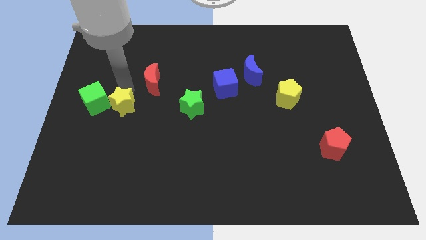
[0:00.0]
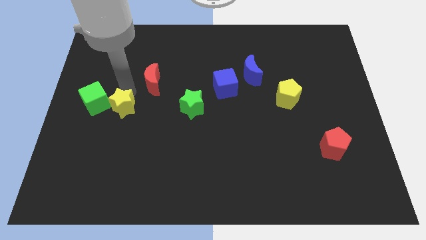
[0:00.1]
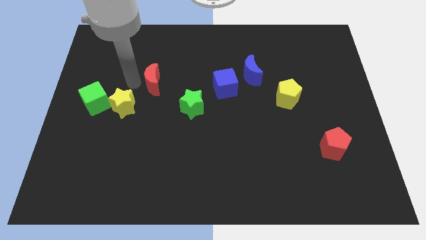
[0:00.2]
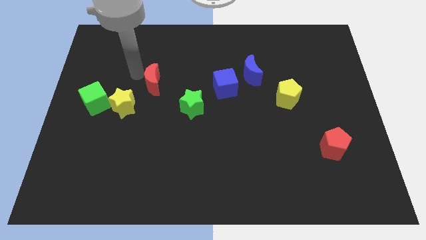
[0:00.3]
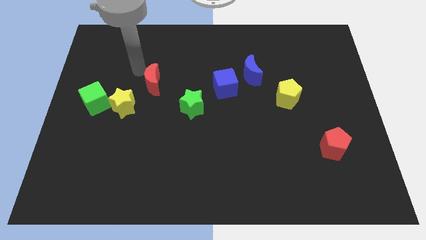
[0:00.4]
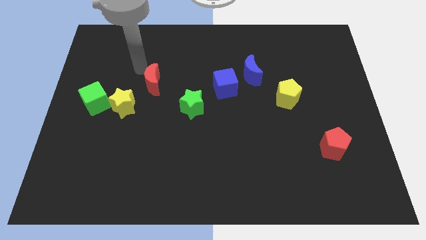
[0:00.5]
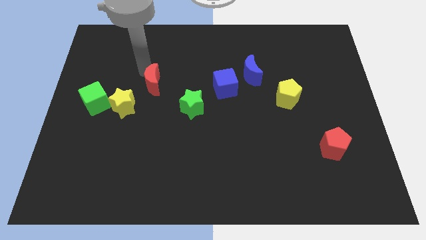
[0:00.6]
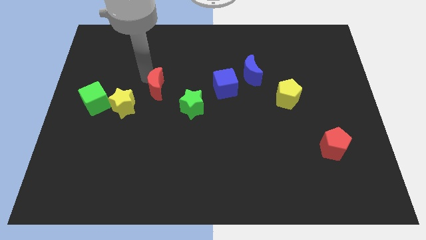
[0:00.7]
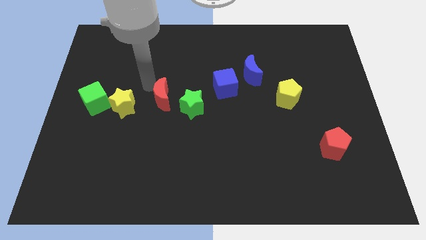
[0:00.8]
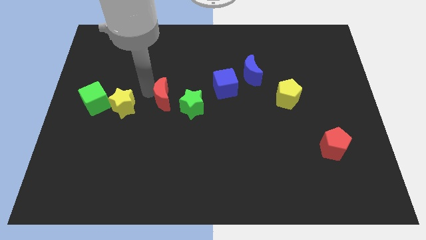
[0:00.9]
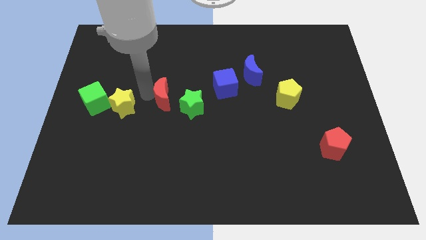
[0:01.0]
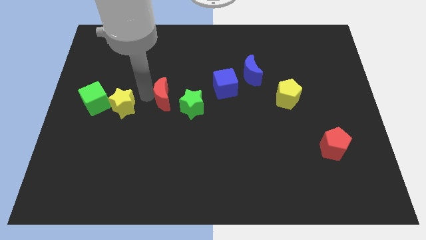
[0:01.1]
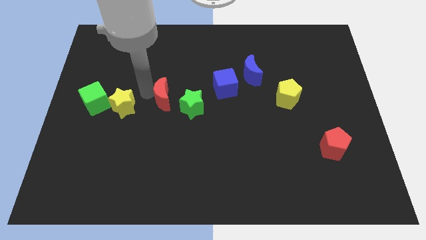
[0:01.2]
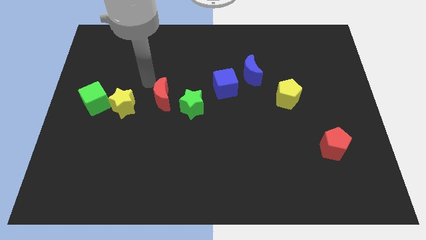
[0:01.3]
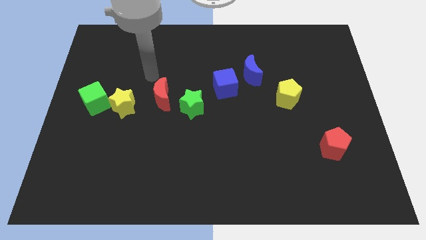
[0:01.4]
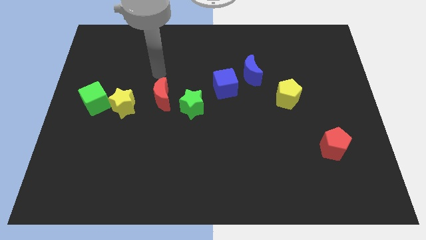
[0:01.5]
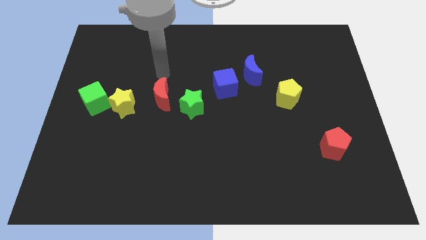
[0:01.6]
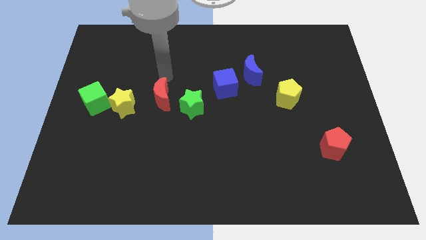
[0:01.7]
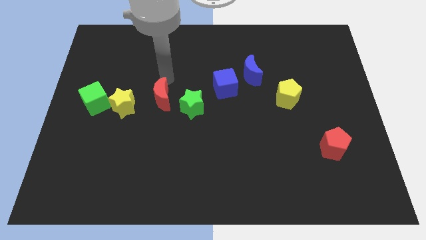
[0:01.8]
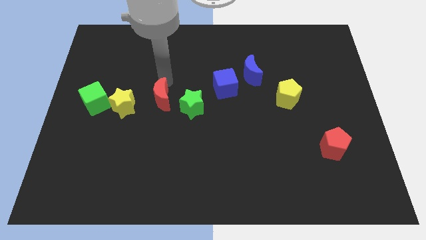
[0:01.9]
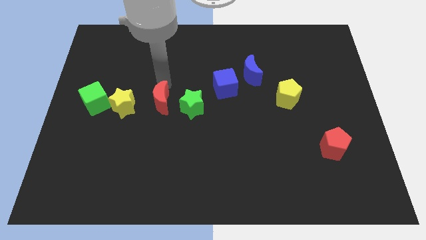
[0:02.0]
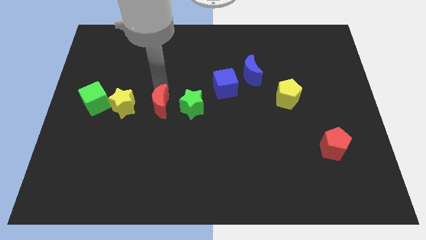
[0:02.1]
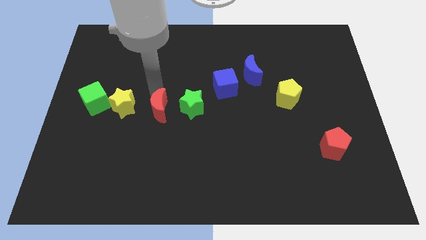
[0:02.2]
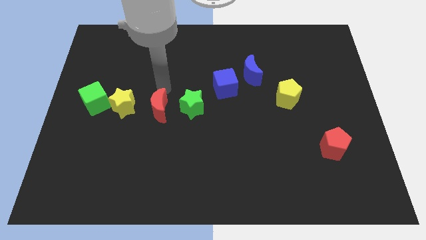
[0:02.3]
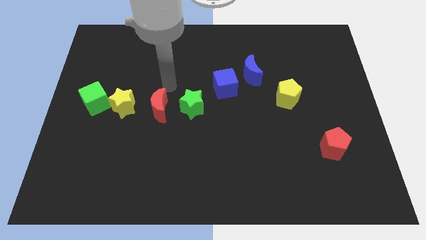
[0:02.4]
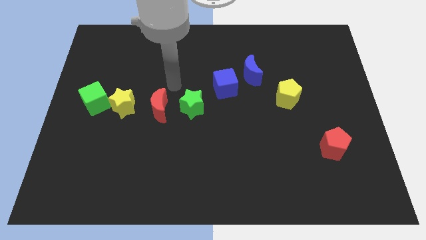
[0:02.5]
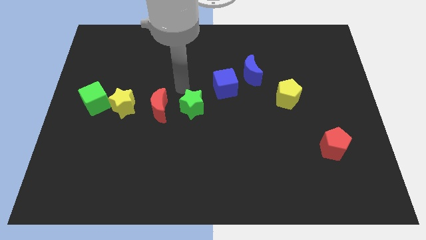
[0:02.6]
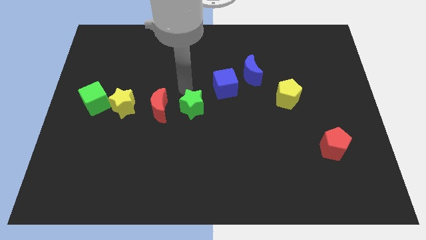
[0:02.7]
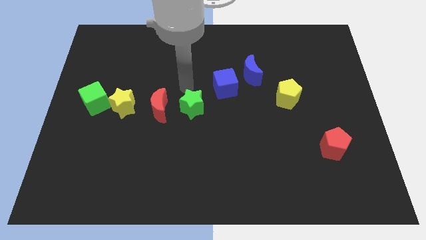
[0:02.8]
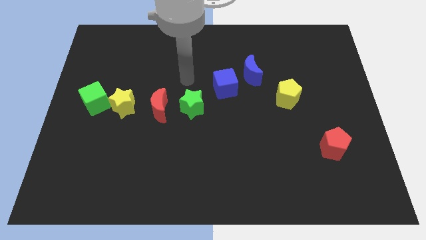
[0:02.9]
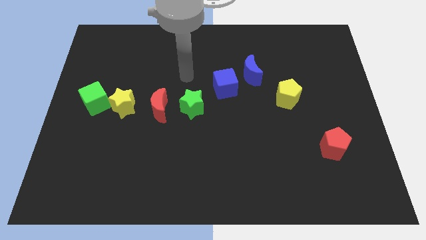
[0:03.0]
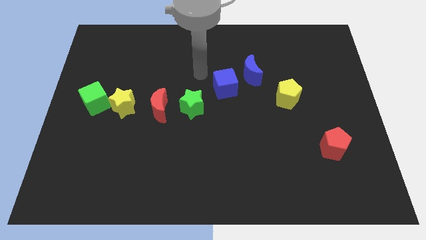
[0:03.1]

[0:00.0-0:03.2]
place the red crescent in a horizontal line left to the green star

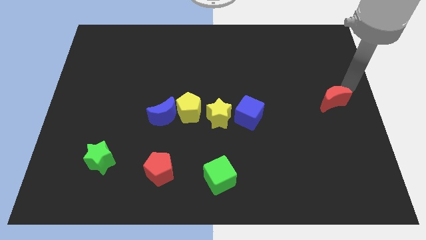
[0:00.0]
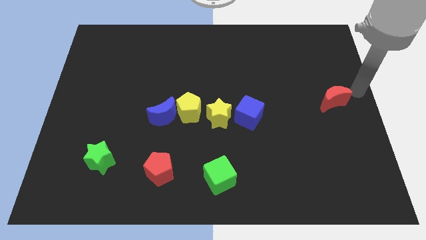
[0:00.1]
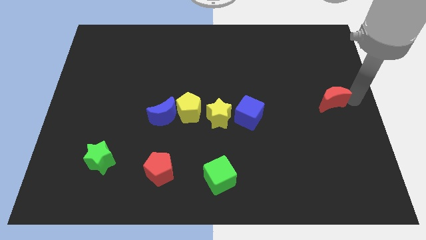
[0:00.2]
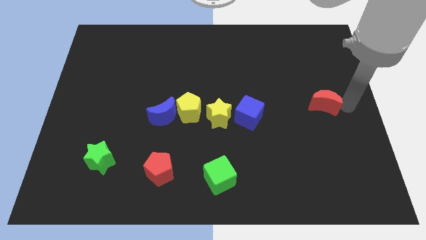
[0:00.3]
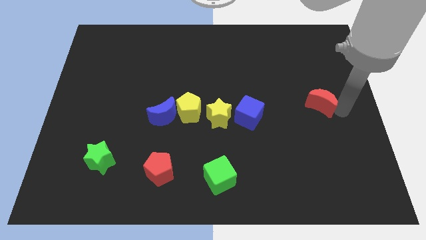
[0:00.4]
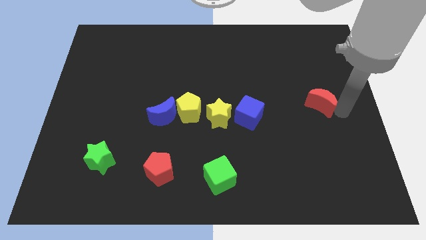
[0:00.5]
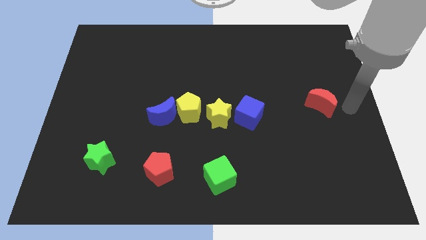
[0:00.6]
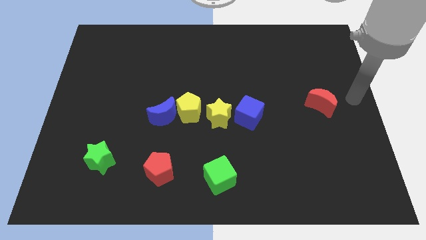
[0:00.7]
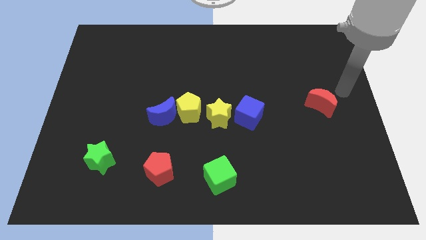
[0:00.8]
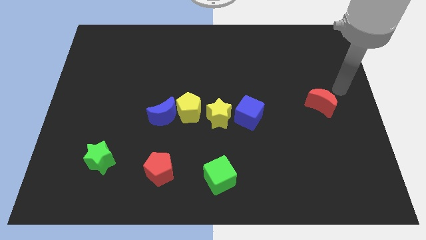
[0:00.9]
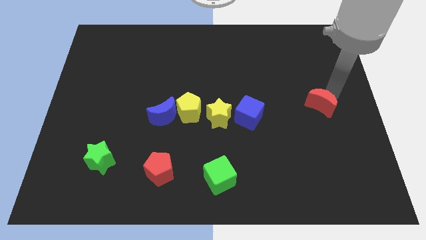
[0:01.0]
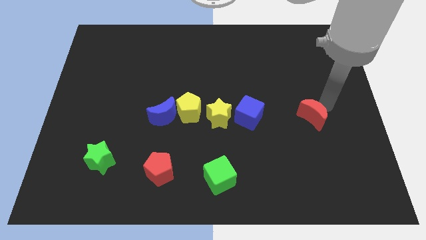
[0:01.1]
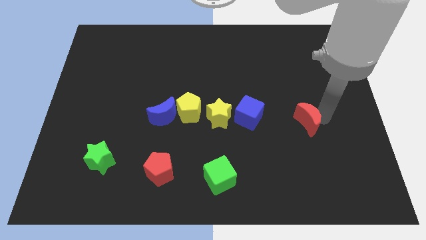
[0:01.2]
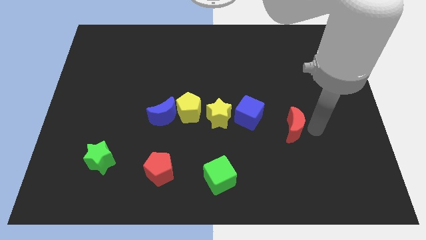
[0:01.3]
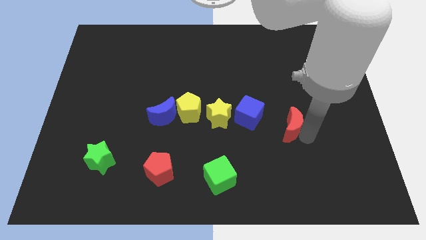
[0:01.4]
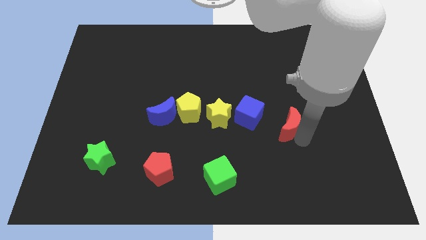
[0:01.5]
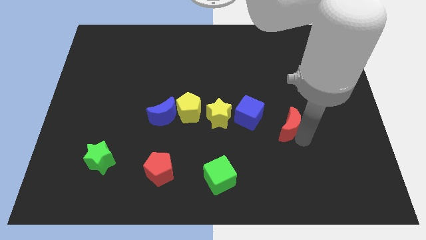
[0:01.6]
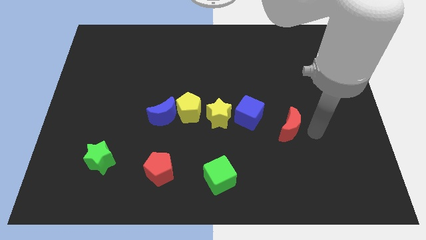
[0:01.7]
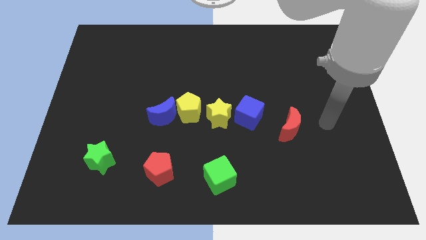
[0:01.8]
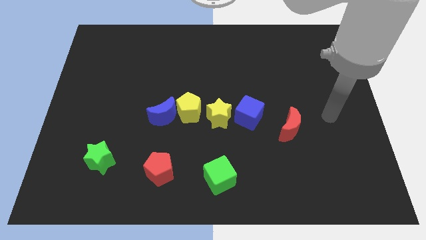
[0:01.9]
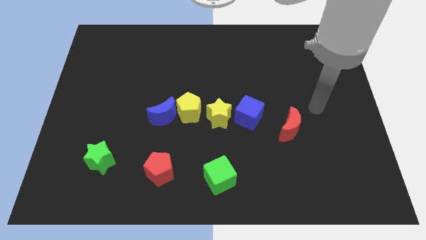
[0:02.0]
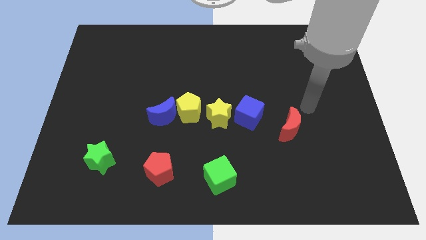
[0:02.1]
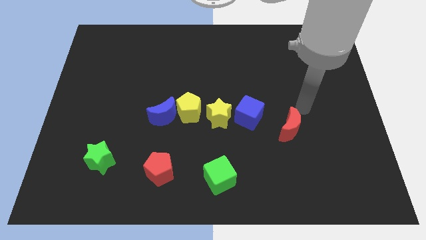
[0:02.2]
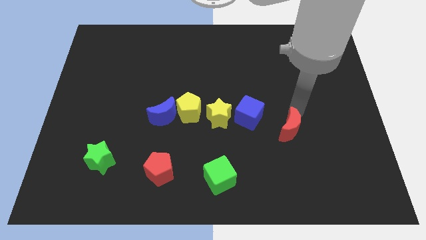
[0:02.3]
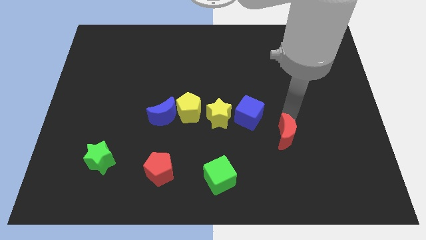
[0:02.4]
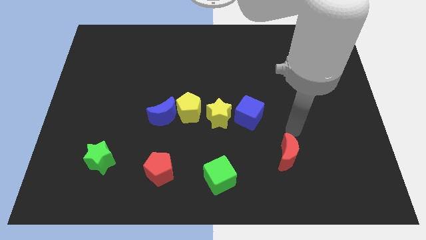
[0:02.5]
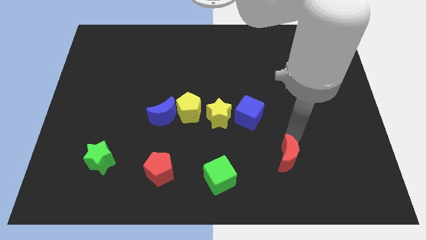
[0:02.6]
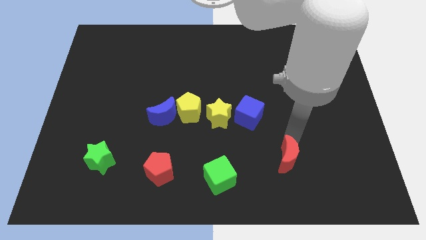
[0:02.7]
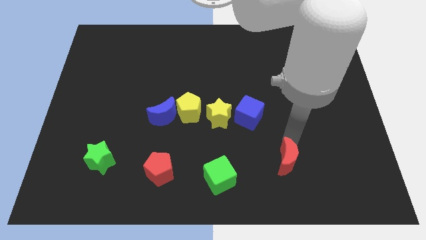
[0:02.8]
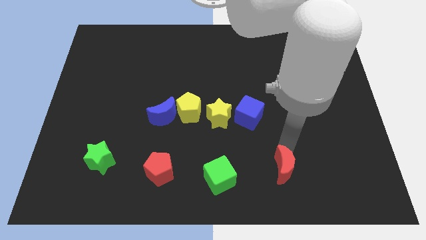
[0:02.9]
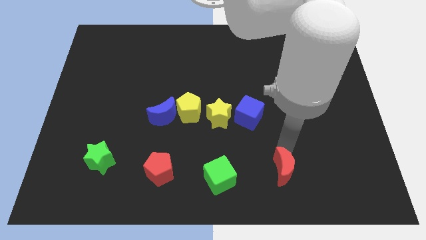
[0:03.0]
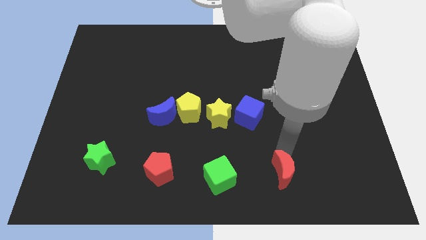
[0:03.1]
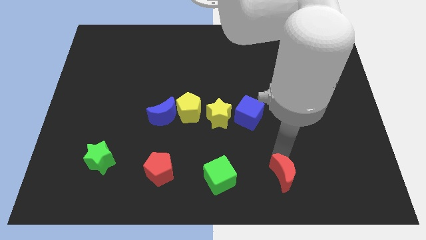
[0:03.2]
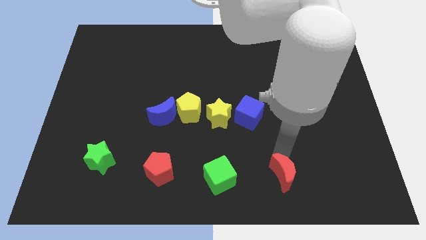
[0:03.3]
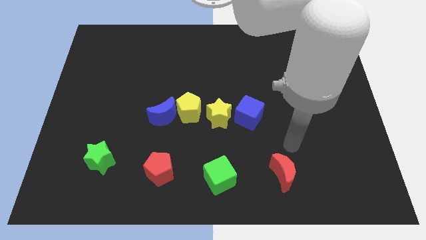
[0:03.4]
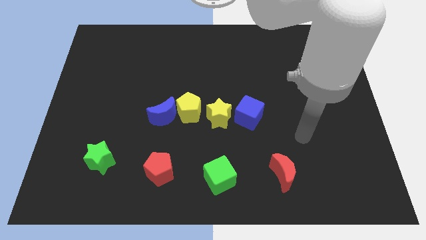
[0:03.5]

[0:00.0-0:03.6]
push the red moon at the bottom

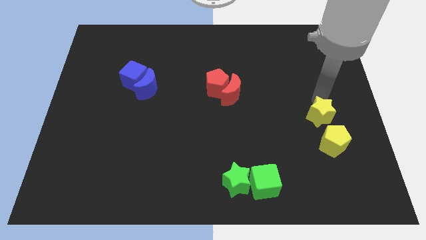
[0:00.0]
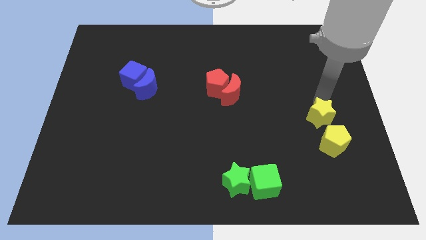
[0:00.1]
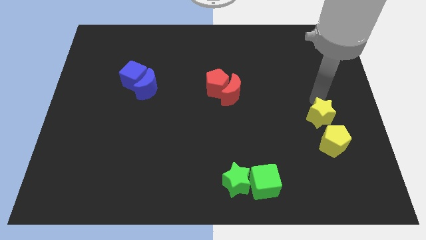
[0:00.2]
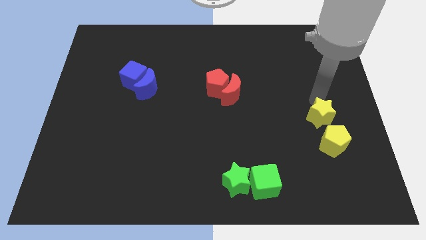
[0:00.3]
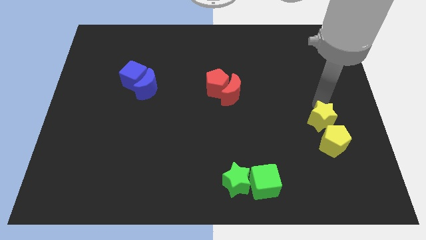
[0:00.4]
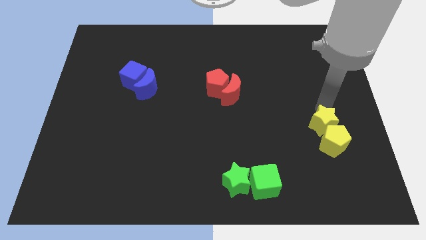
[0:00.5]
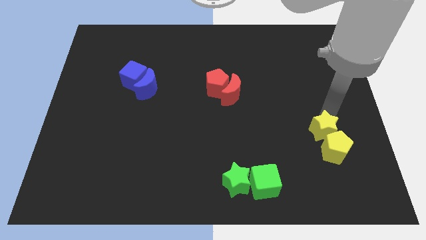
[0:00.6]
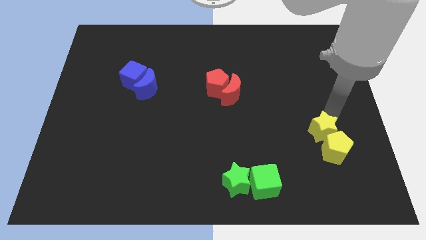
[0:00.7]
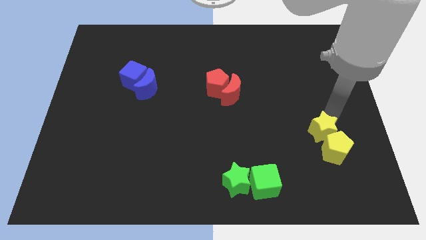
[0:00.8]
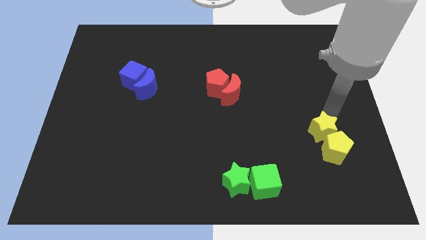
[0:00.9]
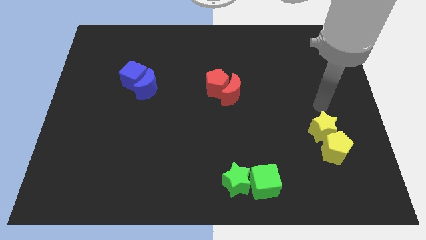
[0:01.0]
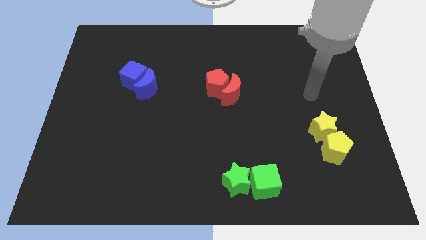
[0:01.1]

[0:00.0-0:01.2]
push the yellow star to the top of the yellow pentagon on the board

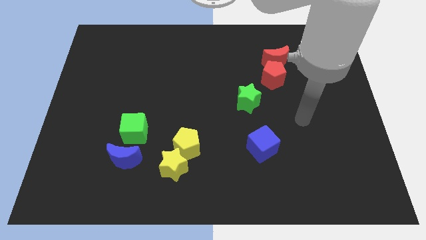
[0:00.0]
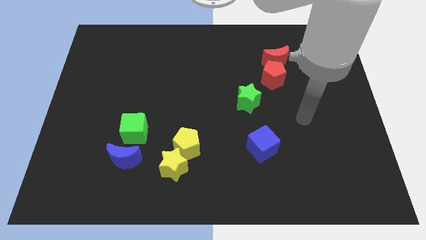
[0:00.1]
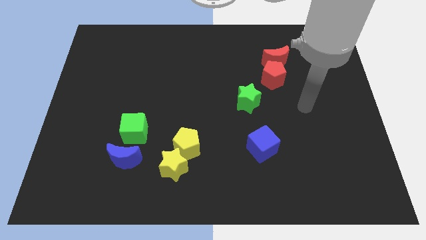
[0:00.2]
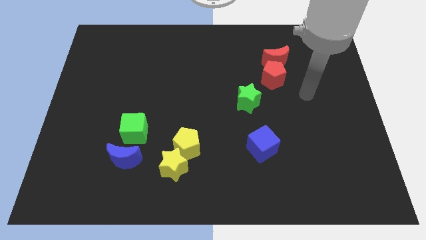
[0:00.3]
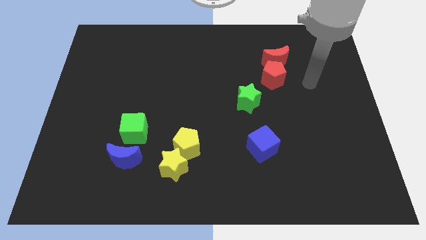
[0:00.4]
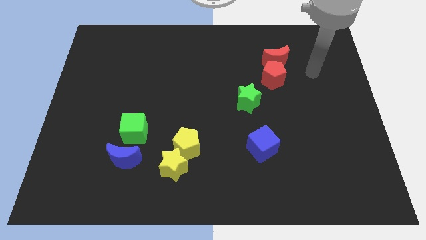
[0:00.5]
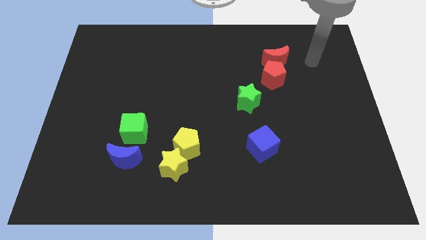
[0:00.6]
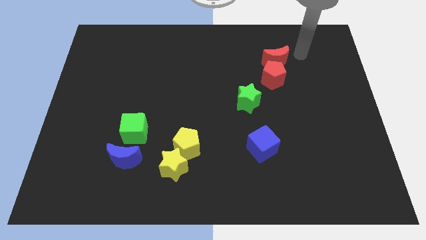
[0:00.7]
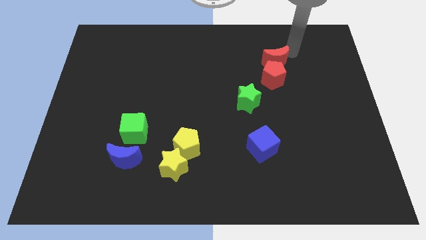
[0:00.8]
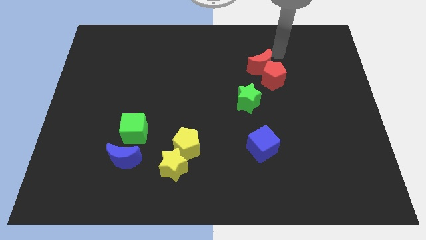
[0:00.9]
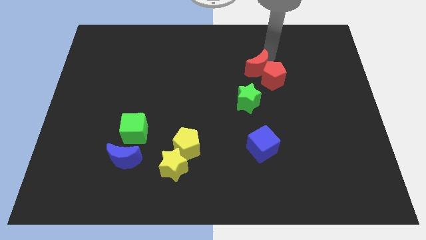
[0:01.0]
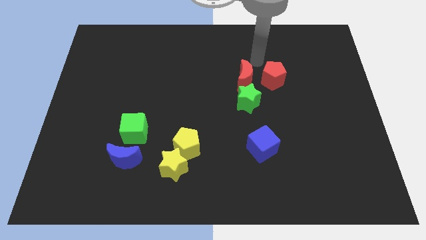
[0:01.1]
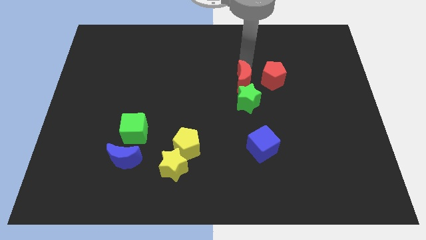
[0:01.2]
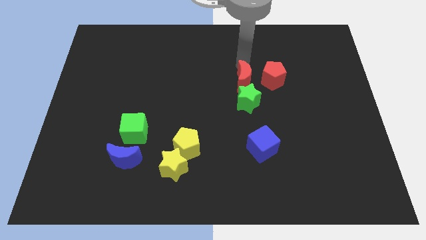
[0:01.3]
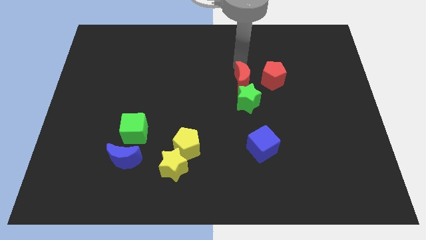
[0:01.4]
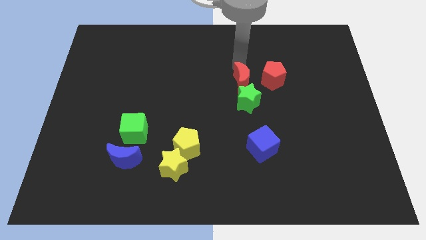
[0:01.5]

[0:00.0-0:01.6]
slightly push the red crescent towards the green star
